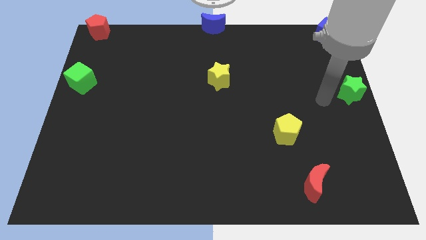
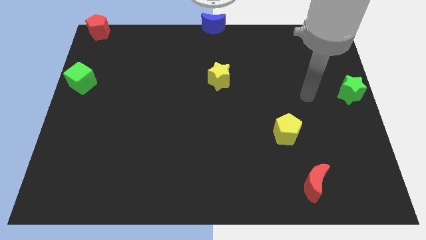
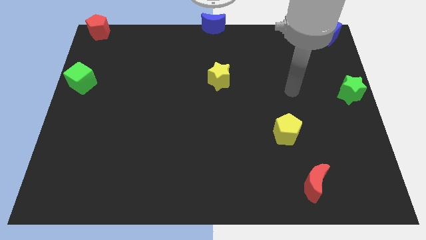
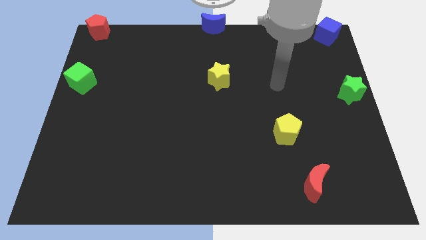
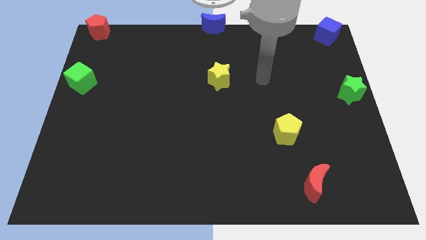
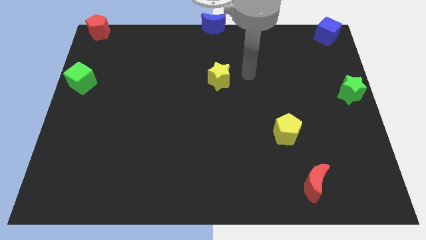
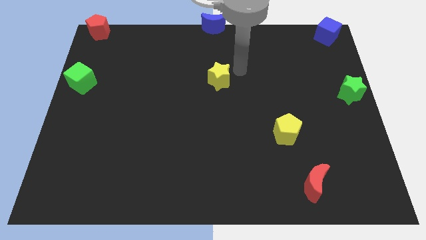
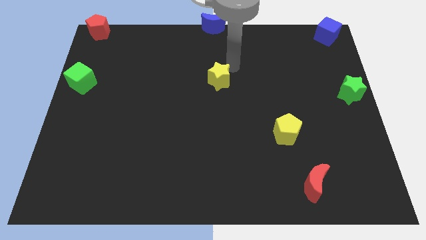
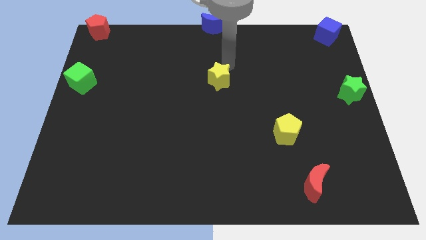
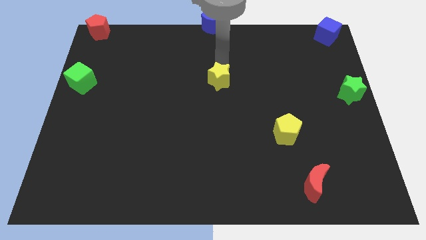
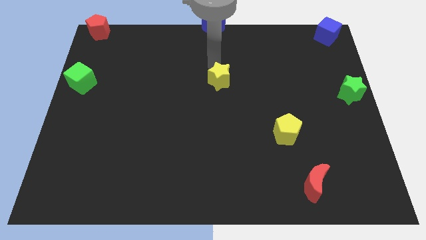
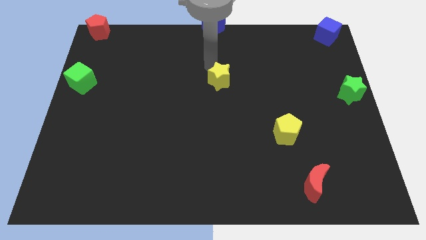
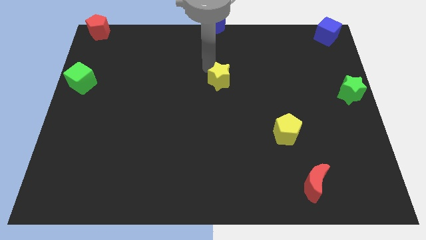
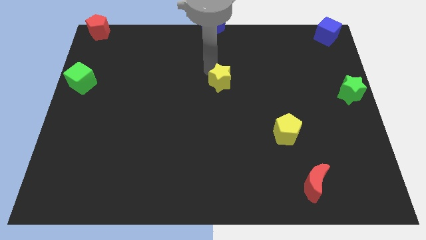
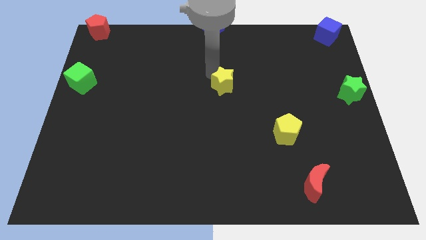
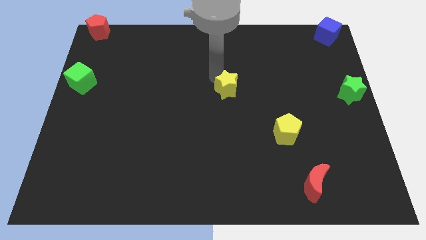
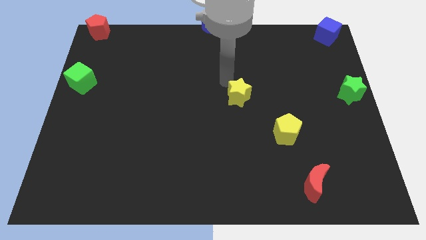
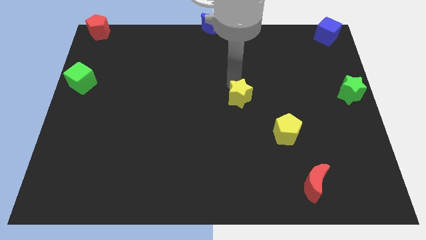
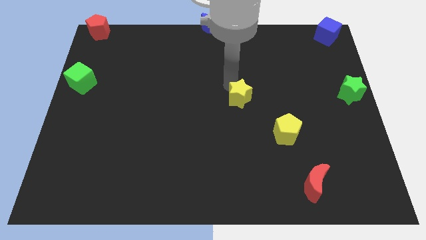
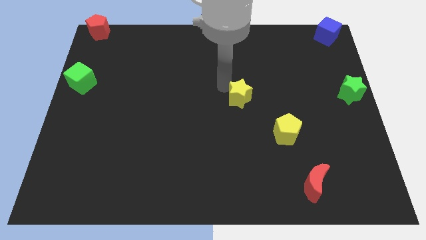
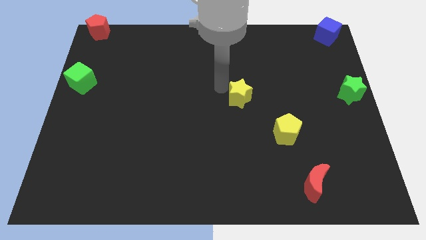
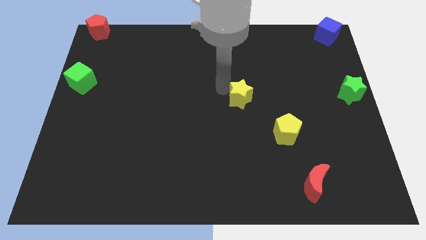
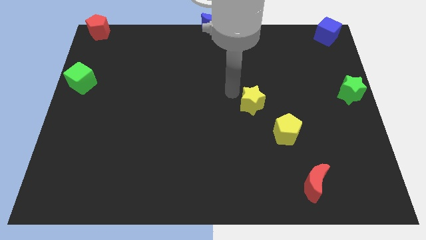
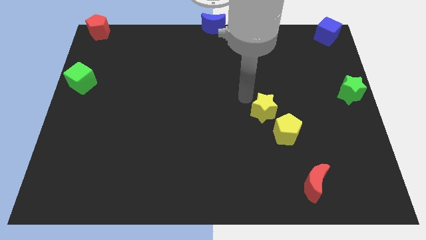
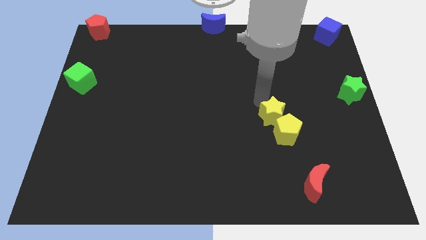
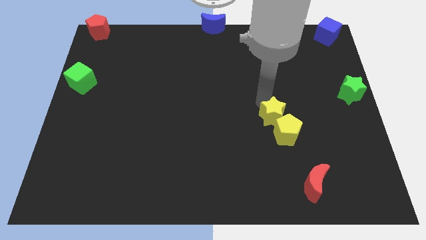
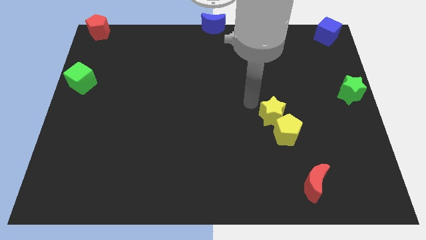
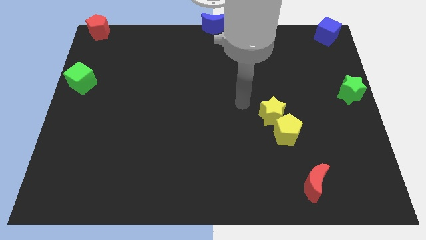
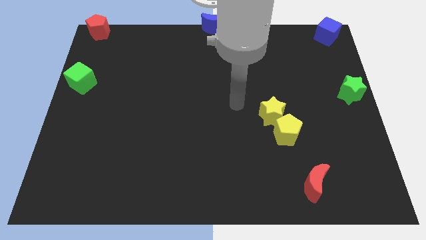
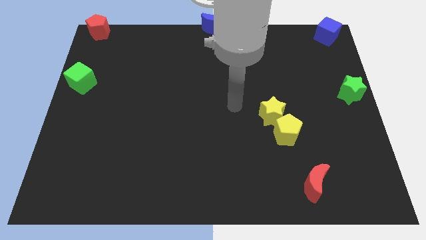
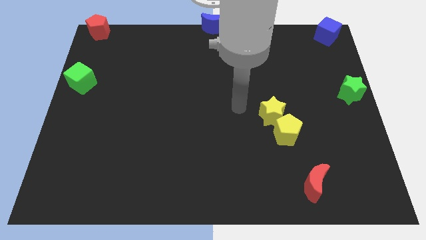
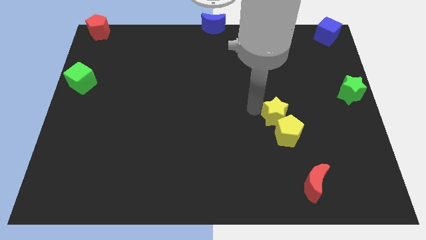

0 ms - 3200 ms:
move the yellow star into the yellow pentagon

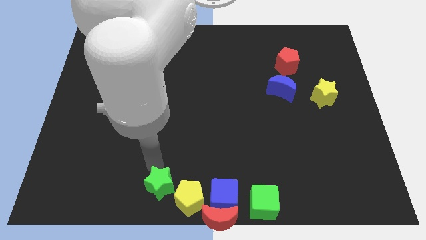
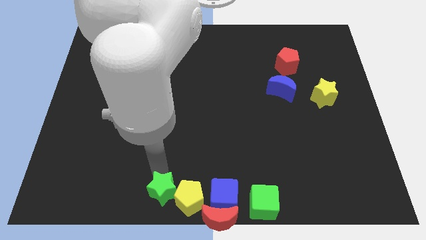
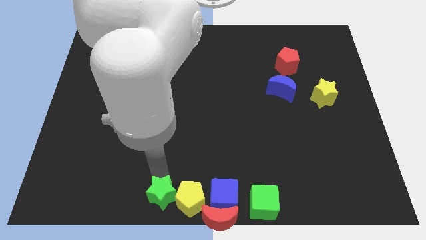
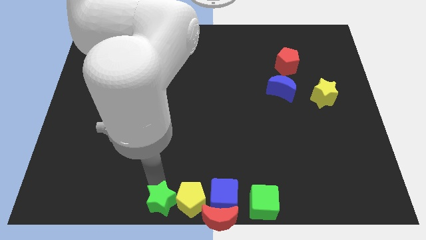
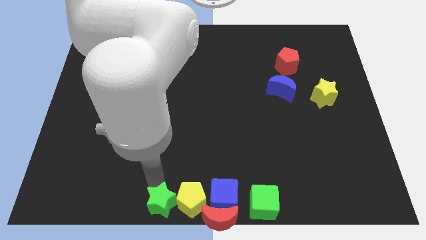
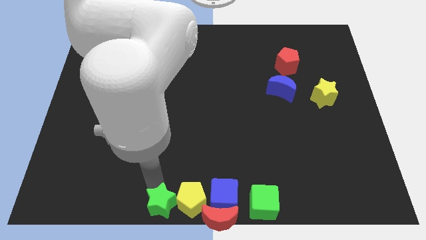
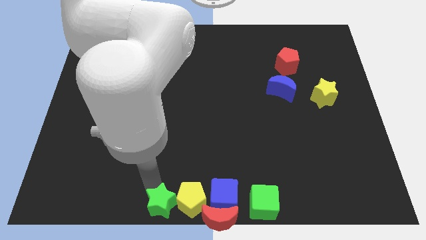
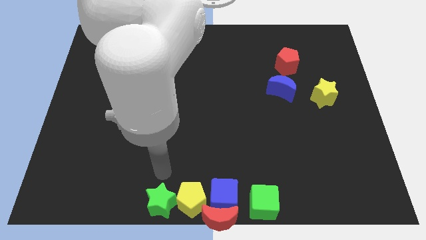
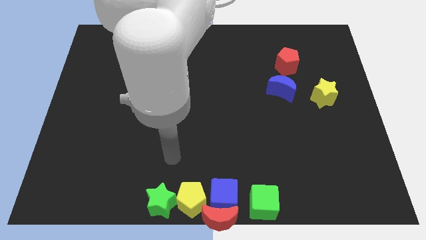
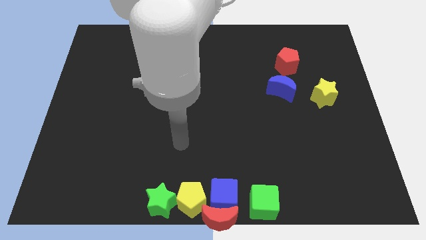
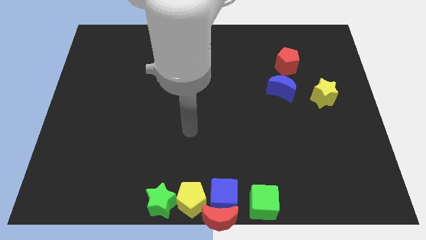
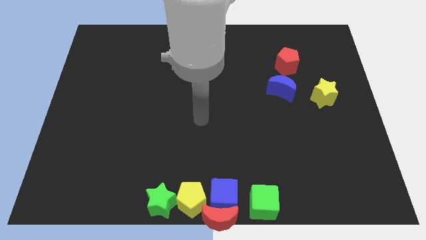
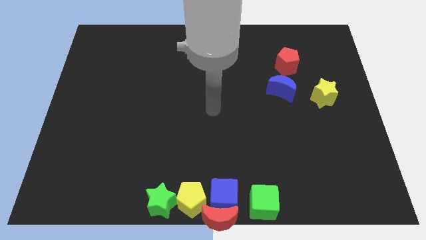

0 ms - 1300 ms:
place the green star on left side of the yellow pentagon

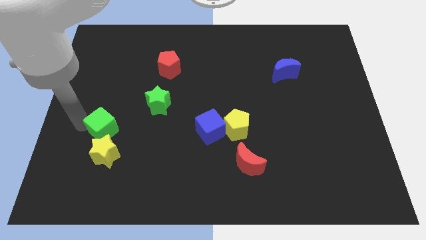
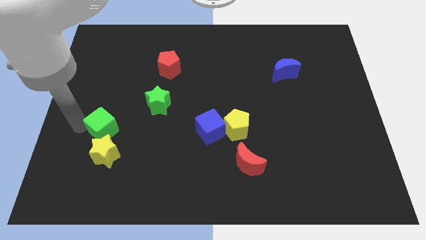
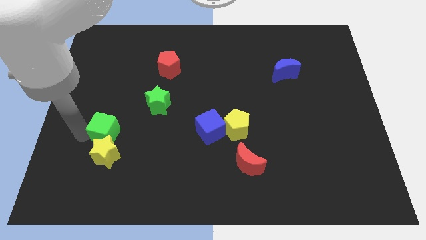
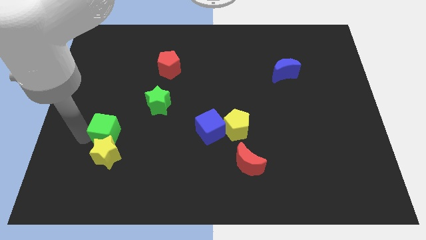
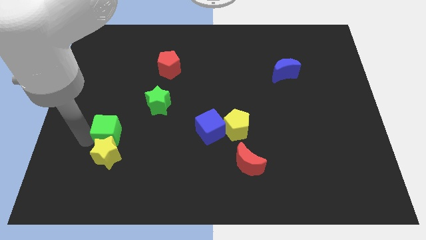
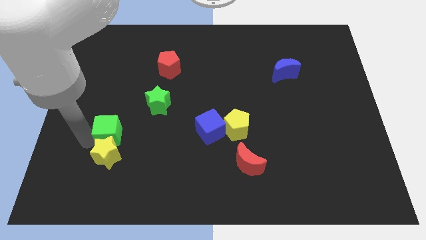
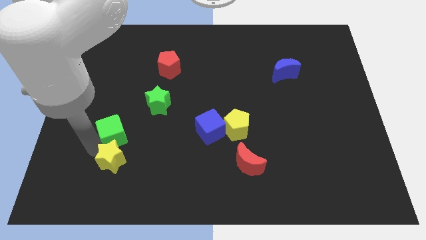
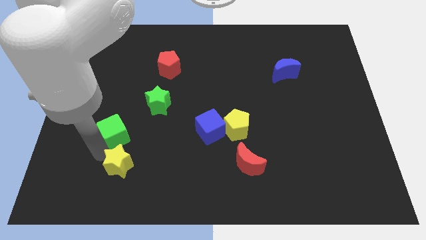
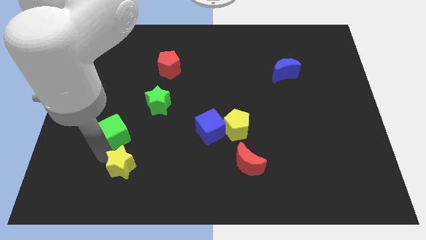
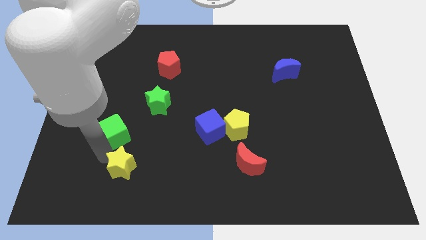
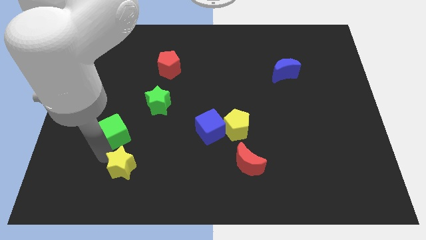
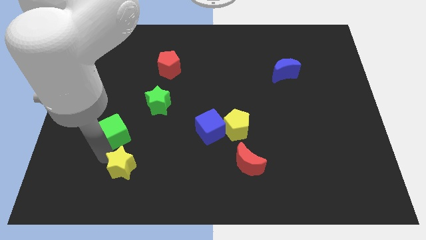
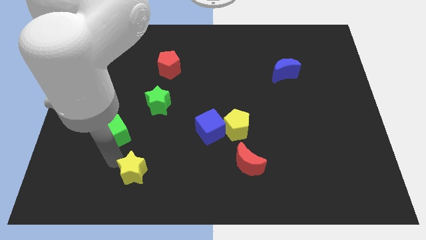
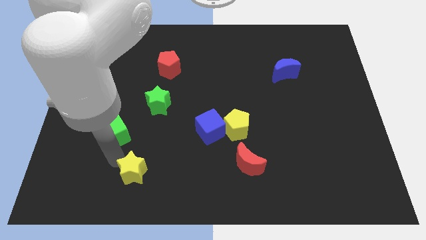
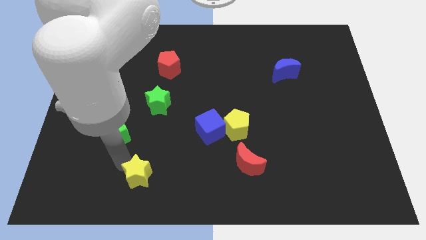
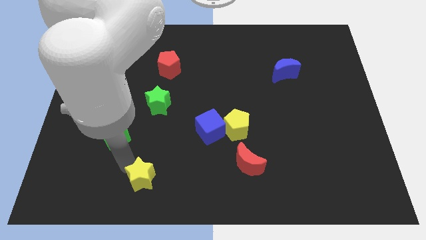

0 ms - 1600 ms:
push the yellow star diagonally bottom right to the green cube

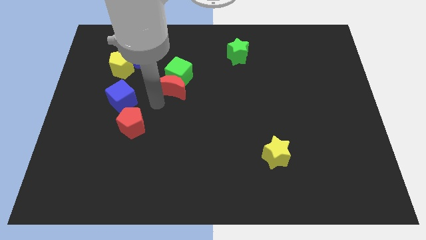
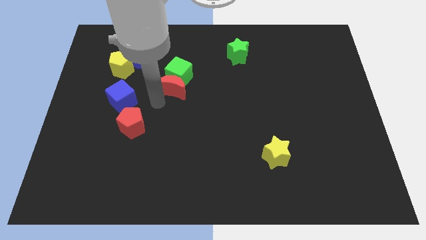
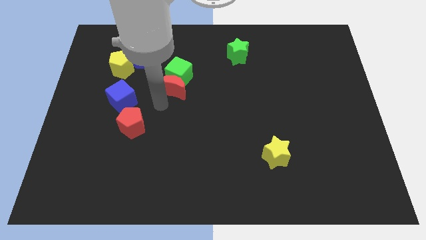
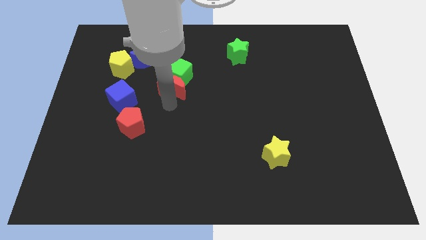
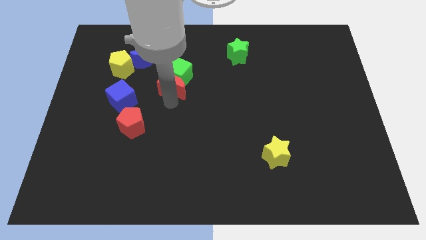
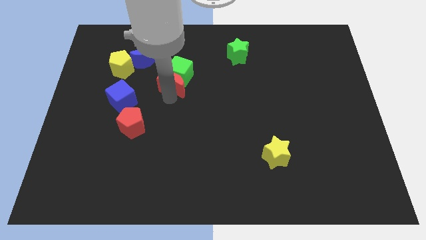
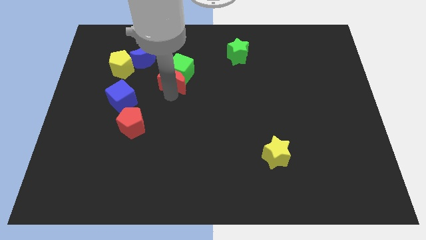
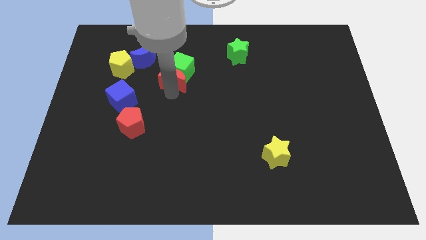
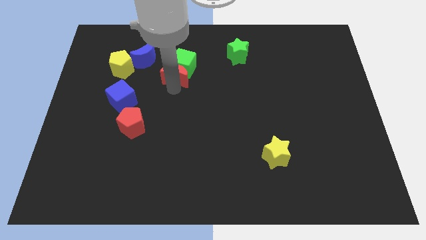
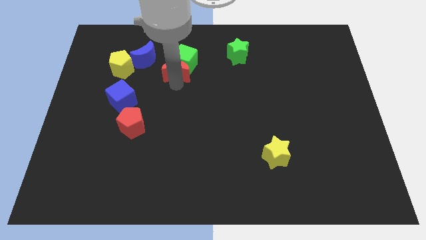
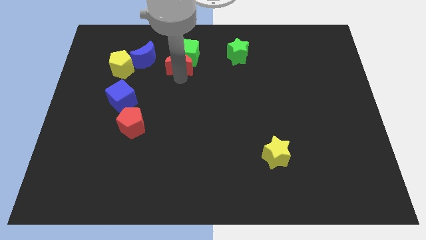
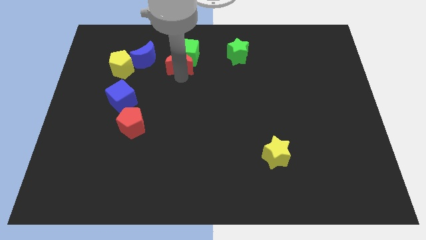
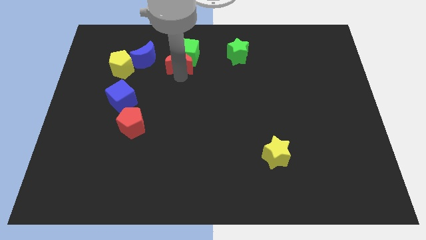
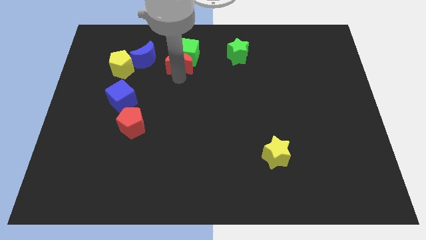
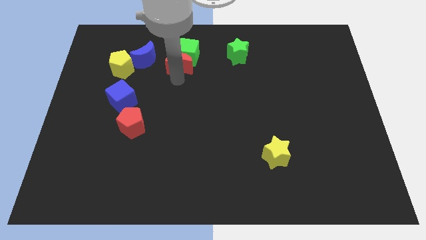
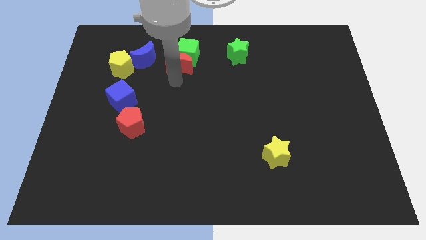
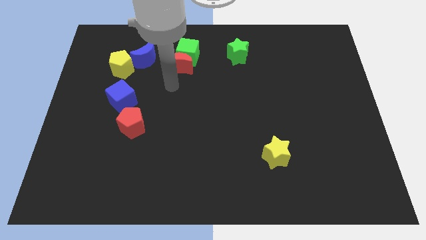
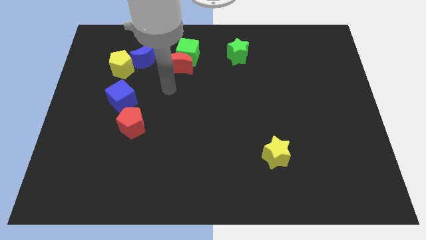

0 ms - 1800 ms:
push the red moon slightly upwards

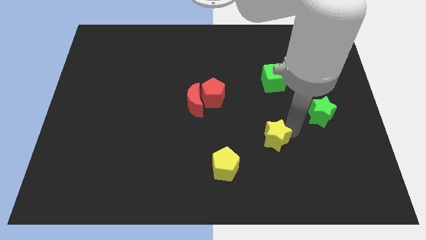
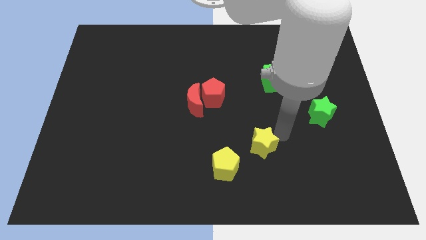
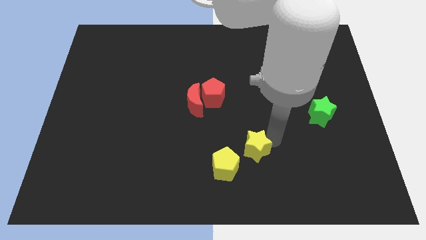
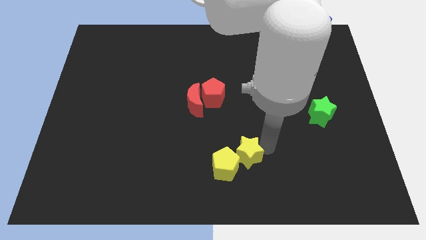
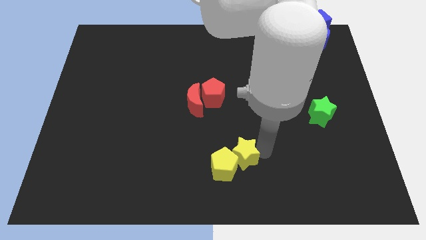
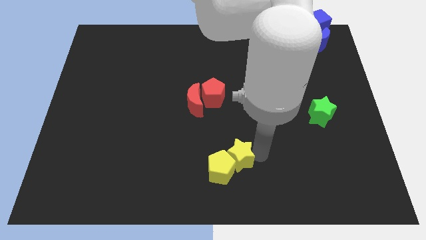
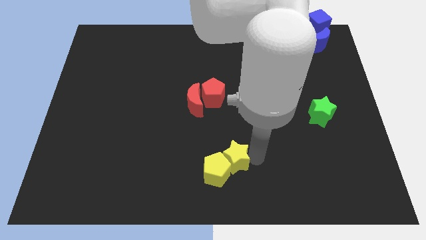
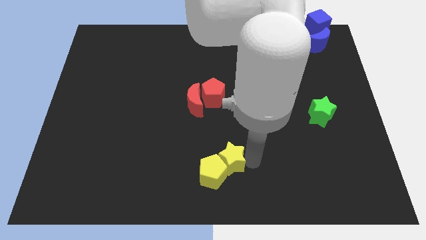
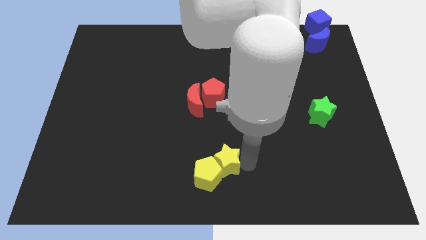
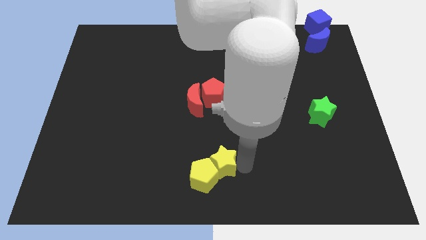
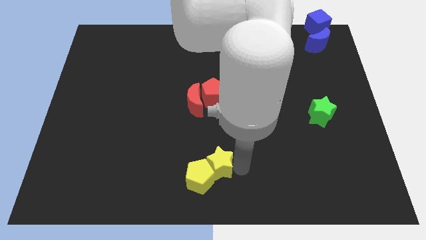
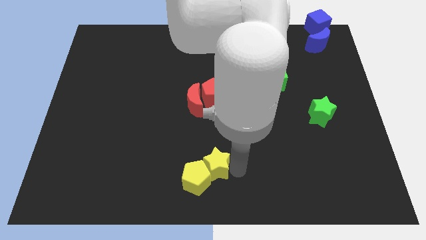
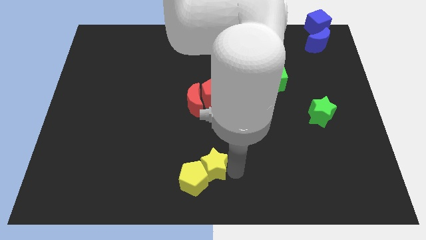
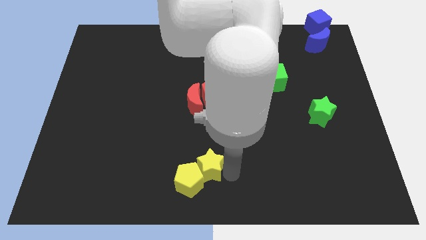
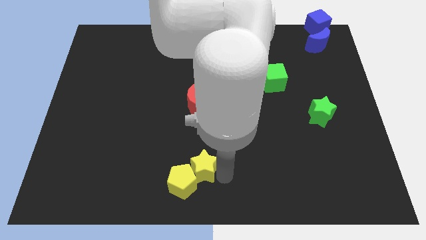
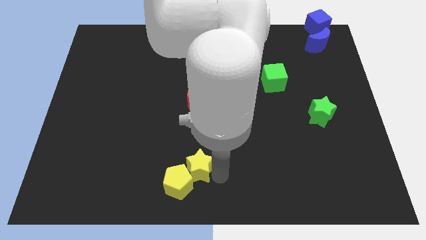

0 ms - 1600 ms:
push the yellow star to the right of the yellow pentagon
